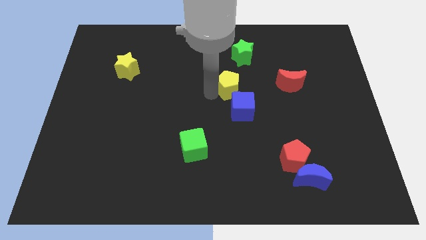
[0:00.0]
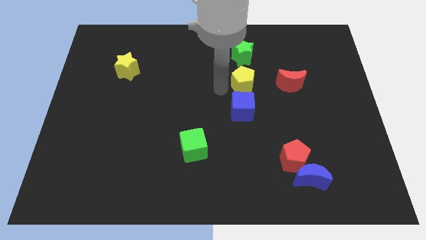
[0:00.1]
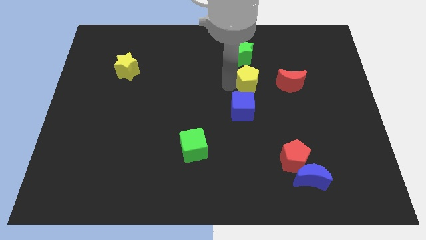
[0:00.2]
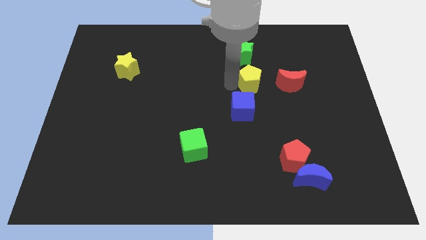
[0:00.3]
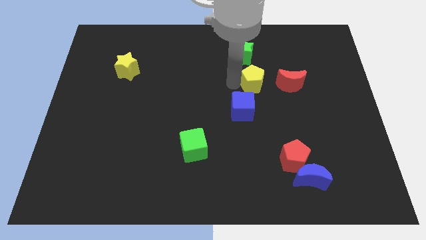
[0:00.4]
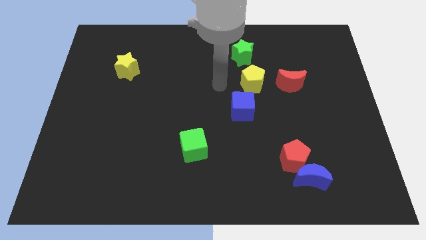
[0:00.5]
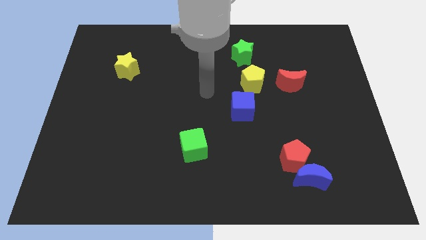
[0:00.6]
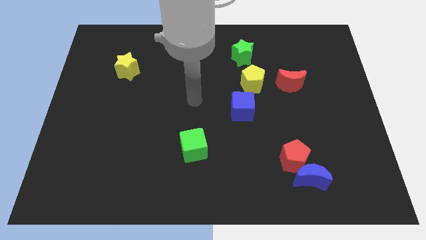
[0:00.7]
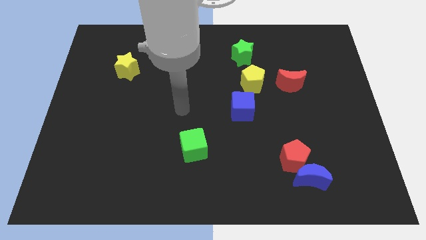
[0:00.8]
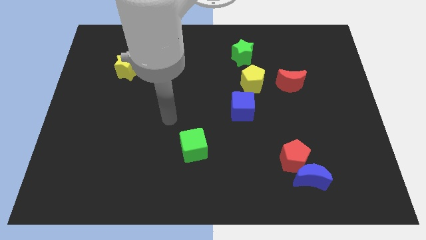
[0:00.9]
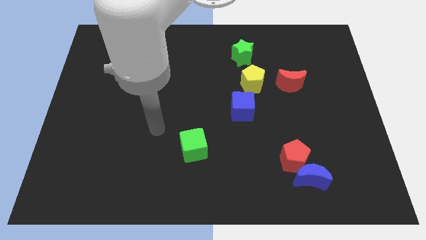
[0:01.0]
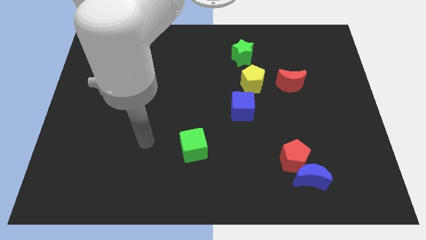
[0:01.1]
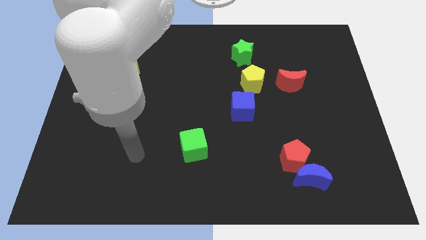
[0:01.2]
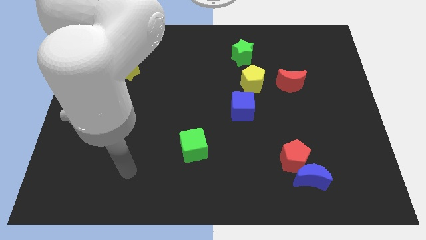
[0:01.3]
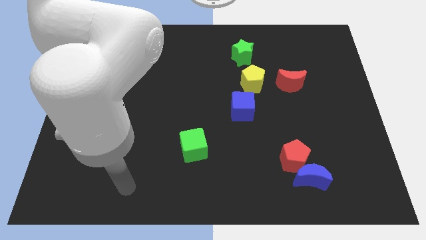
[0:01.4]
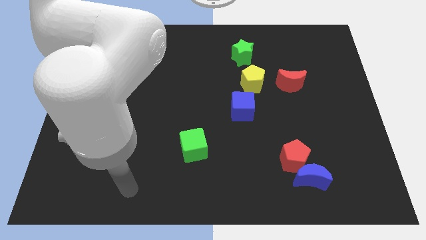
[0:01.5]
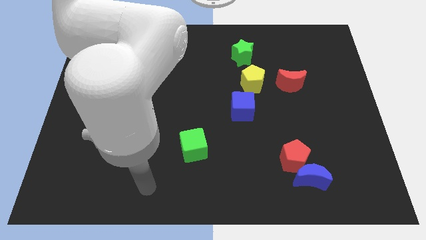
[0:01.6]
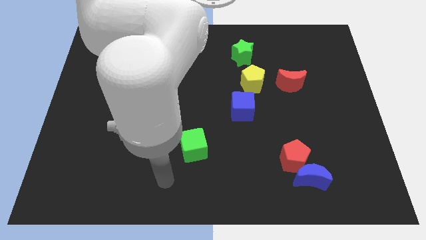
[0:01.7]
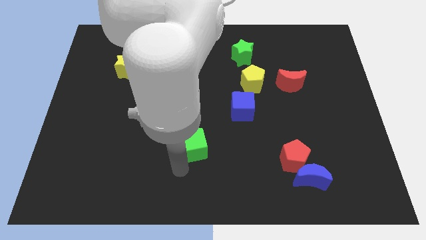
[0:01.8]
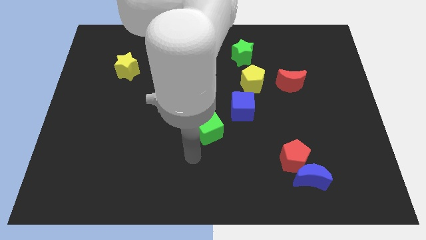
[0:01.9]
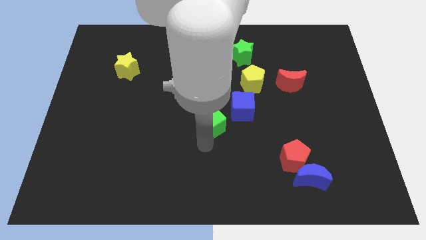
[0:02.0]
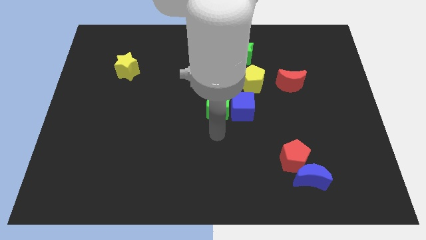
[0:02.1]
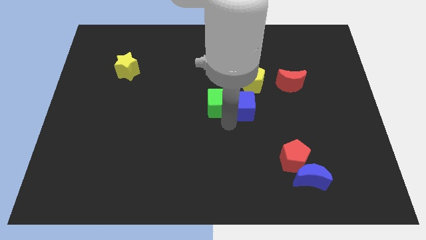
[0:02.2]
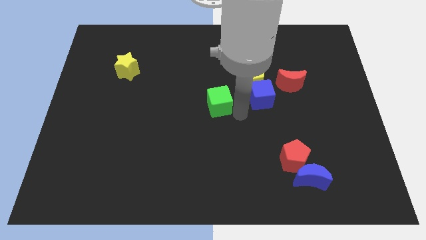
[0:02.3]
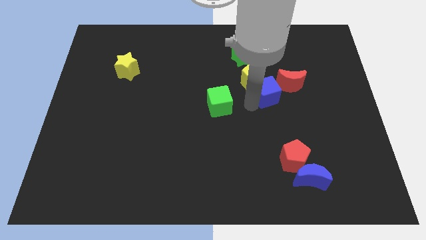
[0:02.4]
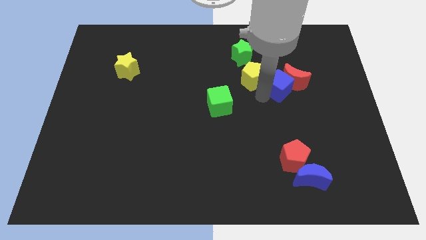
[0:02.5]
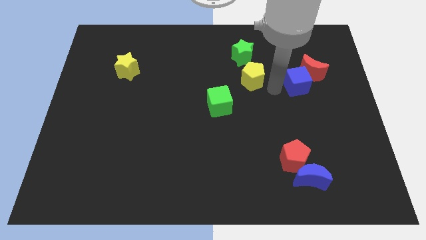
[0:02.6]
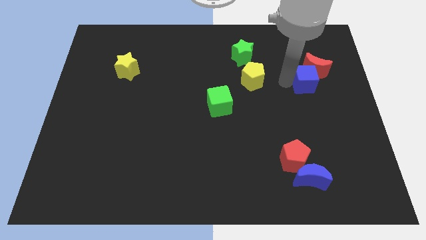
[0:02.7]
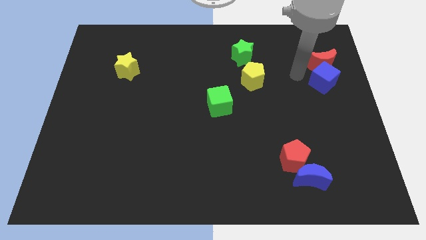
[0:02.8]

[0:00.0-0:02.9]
place the green cube to the left side of the blue cube

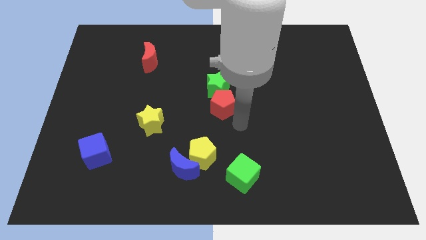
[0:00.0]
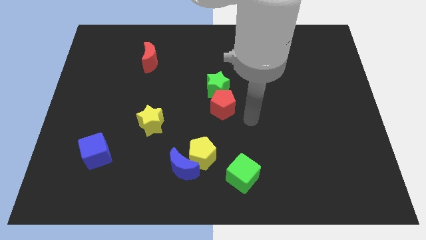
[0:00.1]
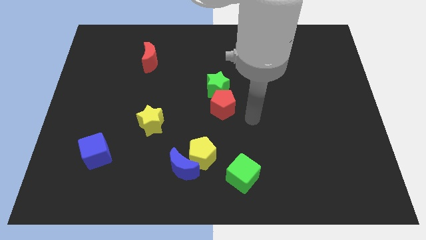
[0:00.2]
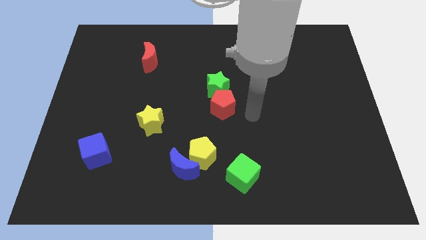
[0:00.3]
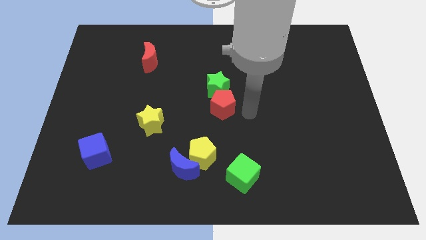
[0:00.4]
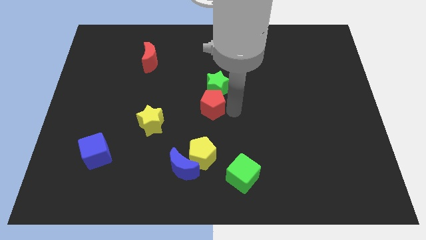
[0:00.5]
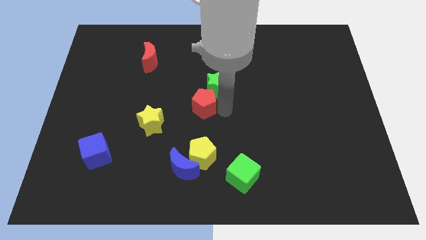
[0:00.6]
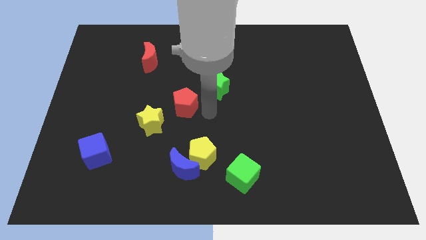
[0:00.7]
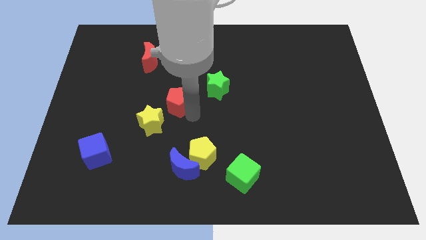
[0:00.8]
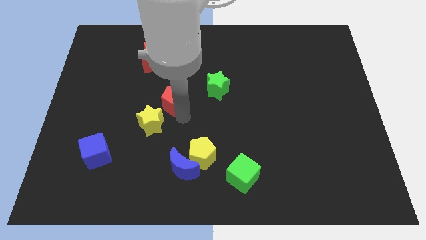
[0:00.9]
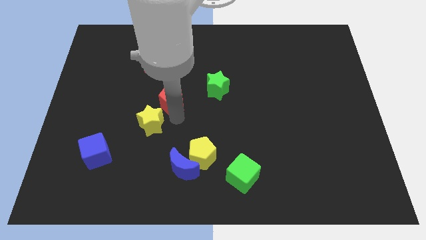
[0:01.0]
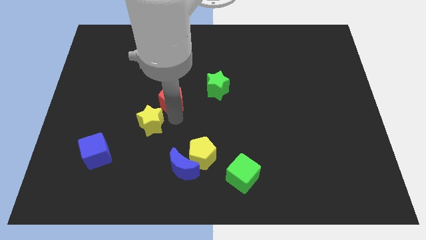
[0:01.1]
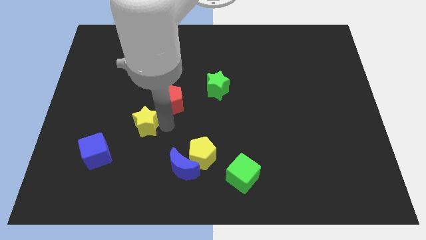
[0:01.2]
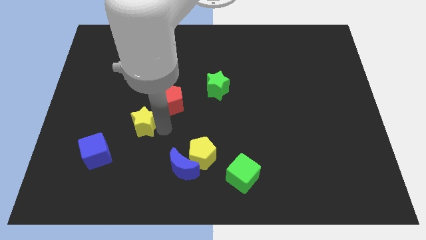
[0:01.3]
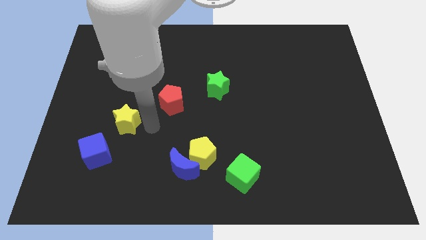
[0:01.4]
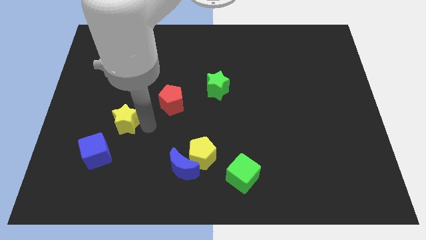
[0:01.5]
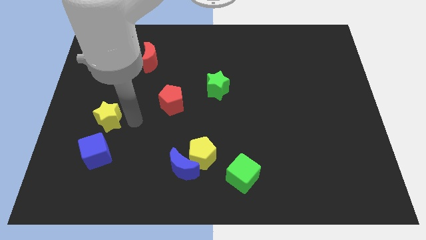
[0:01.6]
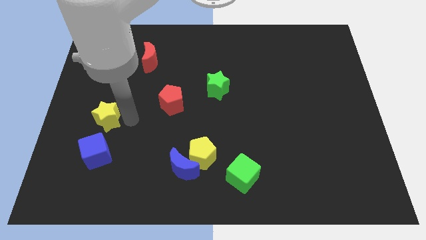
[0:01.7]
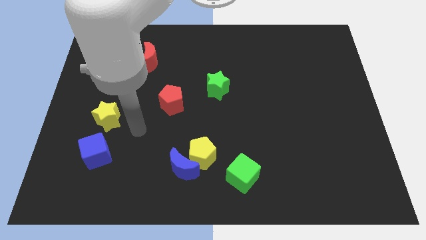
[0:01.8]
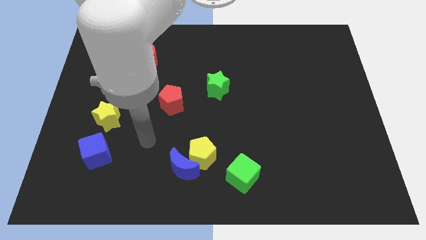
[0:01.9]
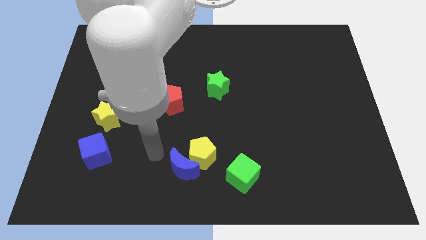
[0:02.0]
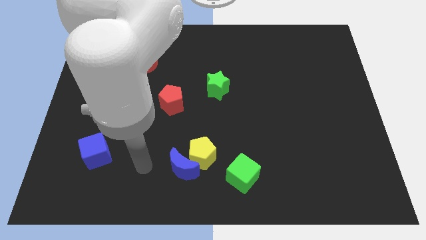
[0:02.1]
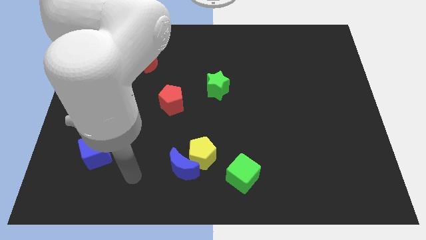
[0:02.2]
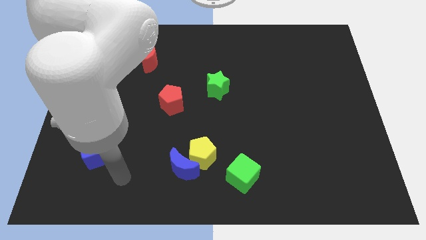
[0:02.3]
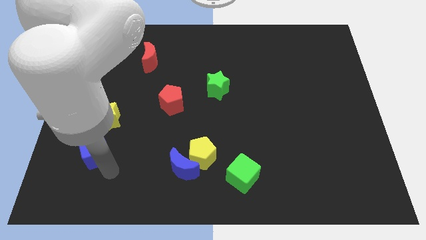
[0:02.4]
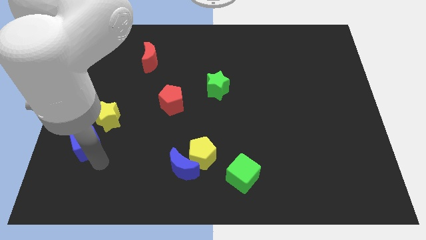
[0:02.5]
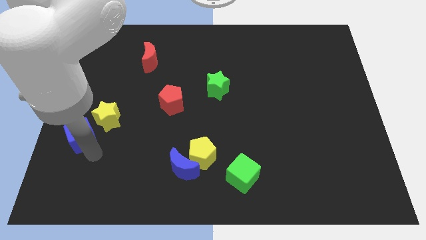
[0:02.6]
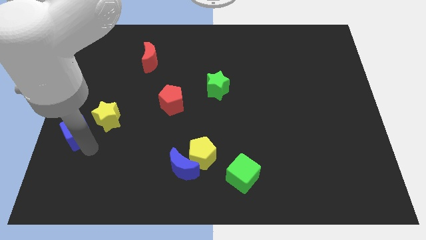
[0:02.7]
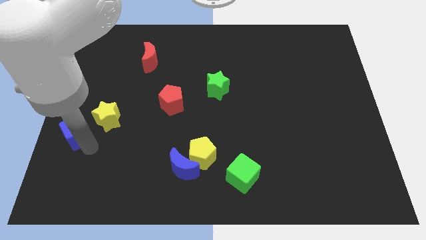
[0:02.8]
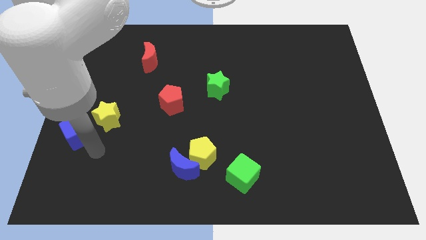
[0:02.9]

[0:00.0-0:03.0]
arrange the red pentagon yellow star and blue cube diagonally in line to the green star

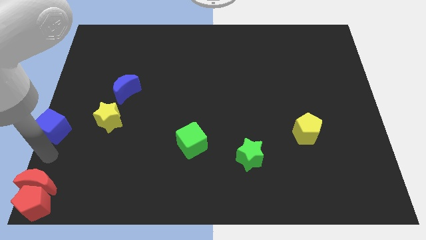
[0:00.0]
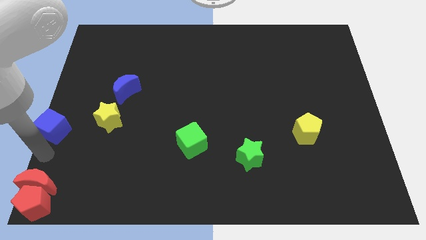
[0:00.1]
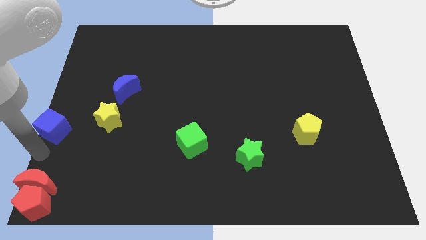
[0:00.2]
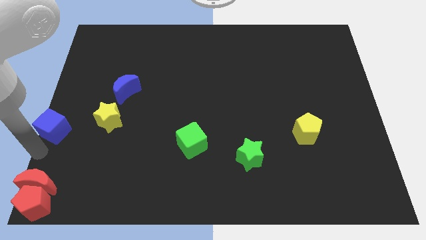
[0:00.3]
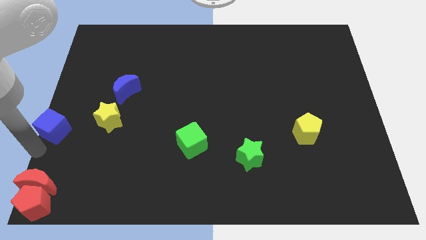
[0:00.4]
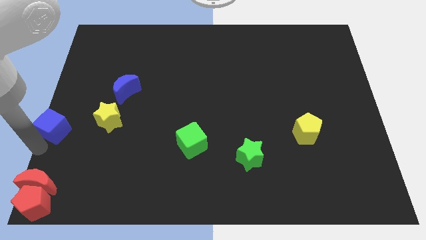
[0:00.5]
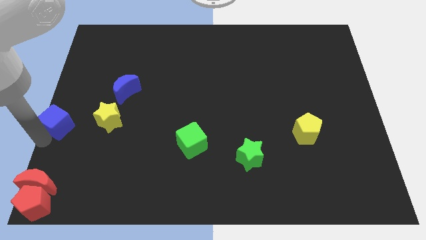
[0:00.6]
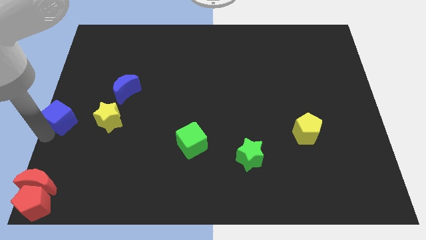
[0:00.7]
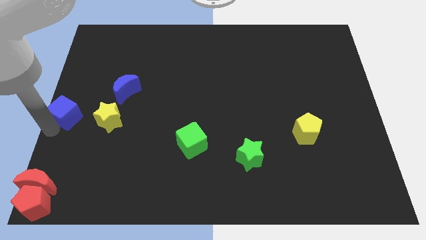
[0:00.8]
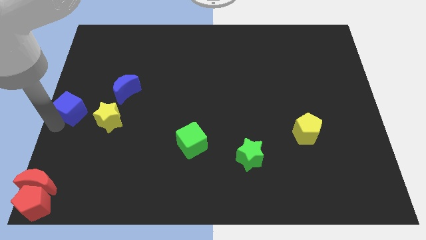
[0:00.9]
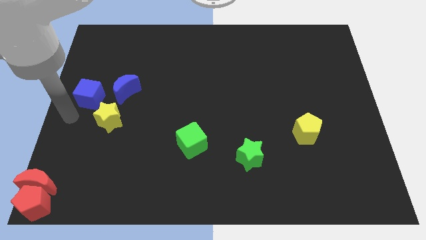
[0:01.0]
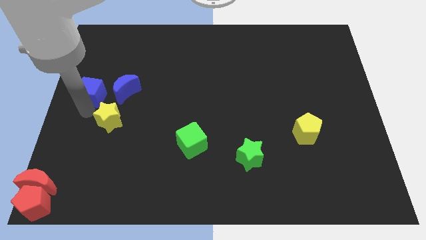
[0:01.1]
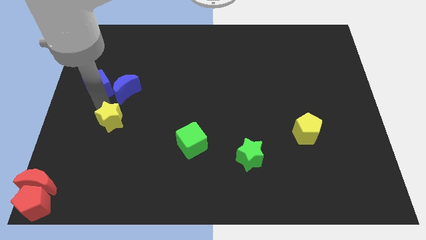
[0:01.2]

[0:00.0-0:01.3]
place the blue cube diagonal to the yellow star

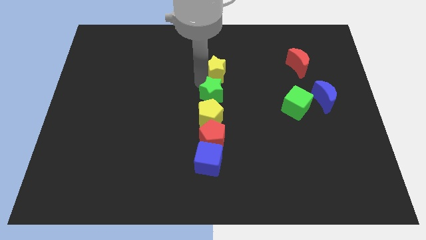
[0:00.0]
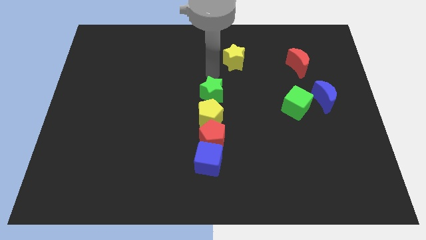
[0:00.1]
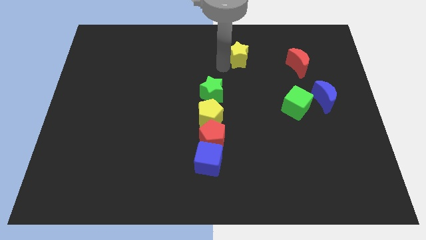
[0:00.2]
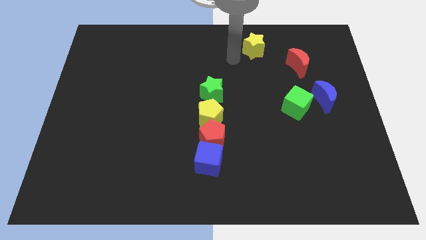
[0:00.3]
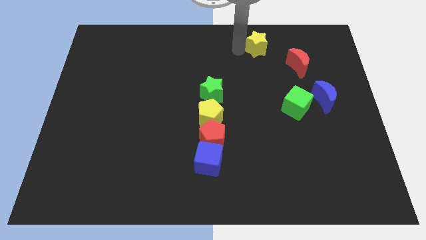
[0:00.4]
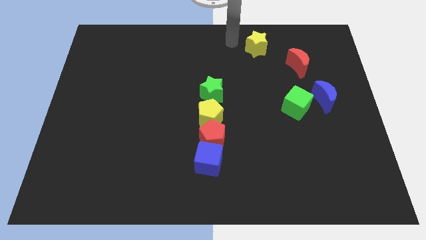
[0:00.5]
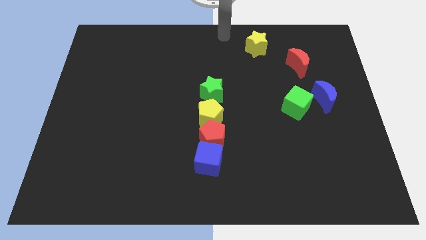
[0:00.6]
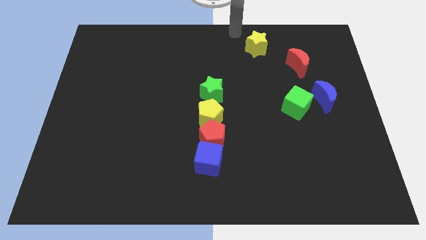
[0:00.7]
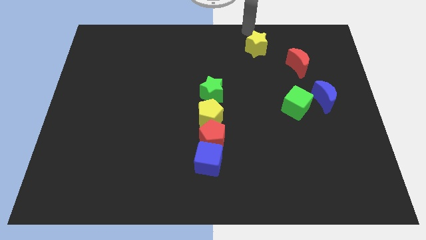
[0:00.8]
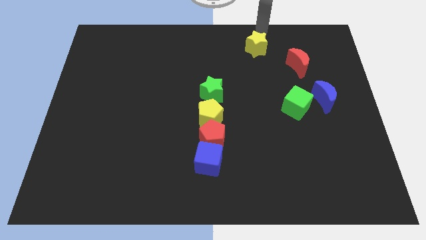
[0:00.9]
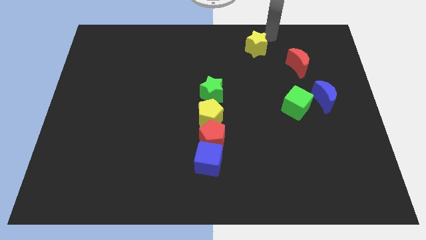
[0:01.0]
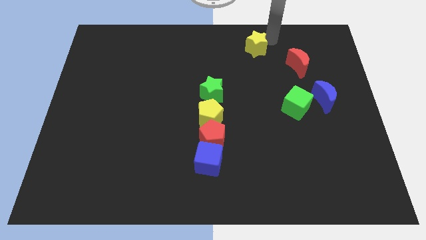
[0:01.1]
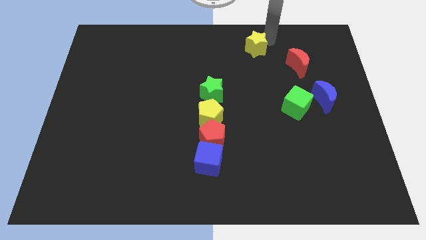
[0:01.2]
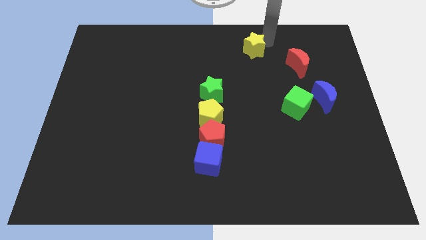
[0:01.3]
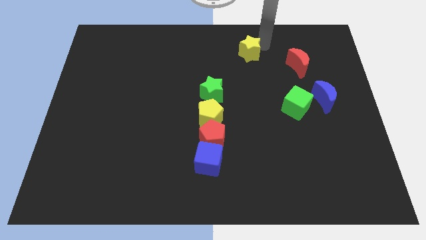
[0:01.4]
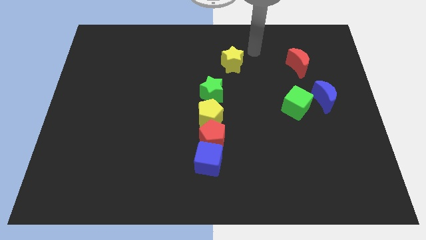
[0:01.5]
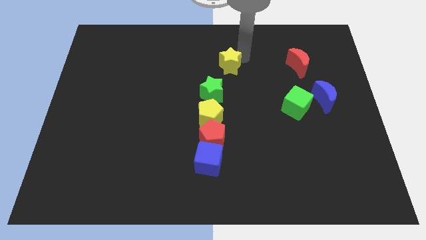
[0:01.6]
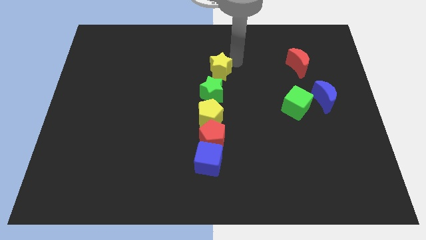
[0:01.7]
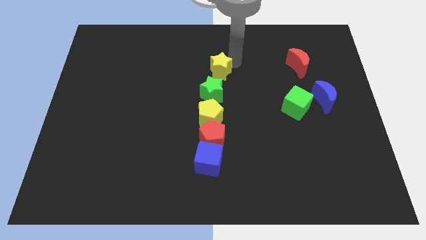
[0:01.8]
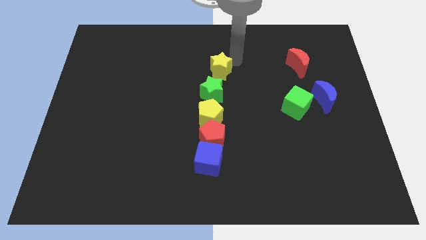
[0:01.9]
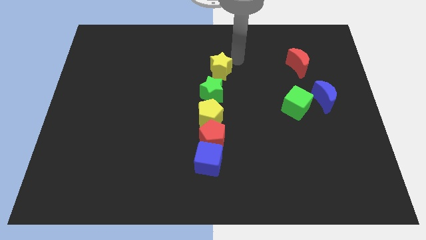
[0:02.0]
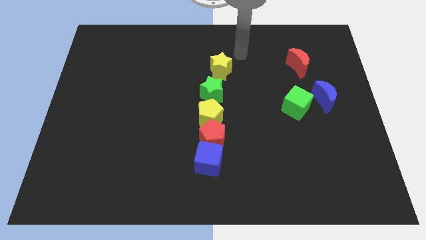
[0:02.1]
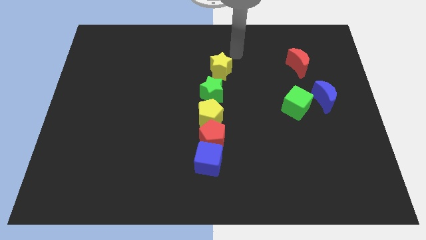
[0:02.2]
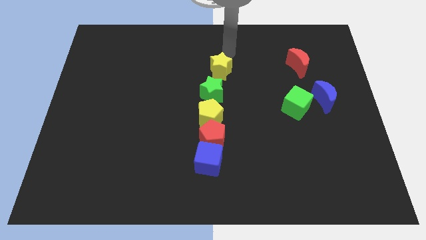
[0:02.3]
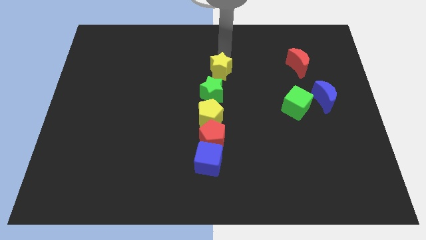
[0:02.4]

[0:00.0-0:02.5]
move the yellow star above the green star
